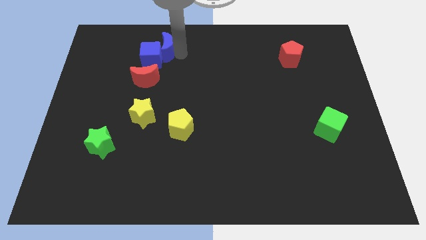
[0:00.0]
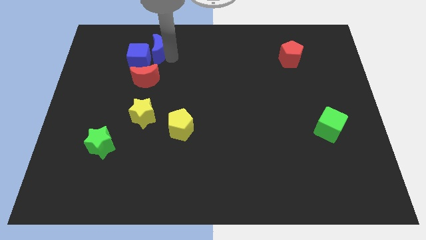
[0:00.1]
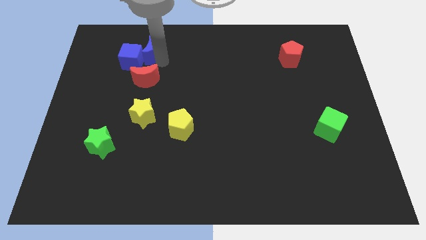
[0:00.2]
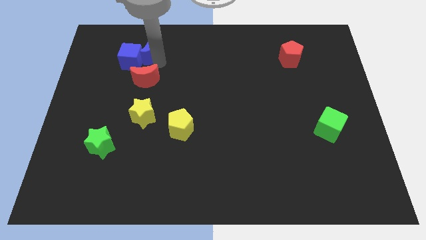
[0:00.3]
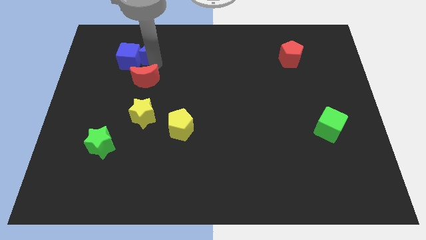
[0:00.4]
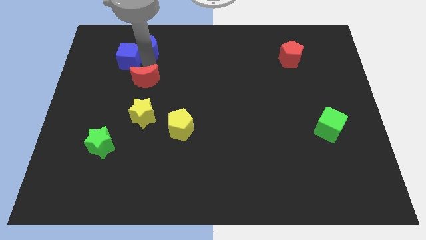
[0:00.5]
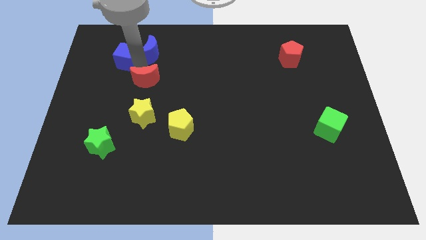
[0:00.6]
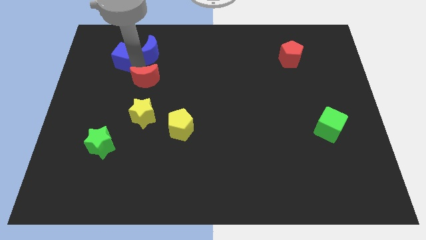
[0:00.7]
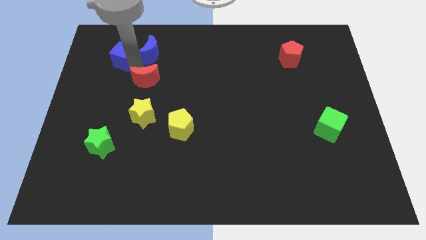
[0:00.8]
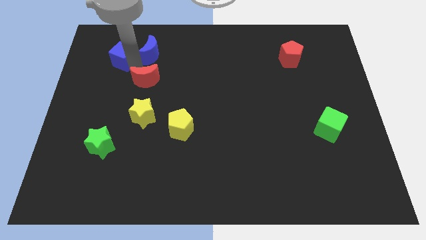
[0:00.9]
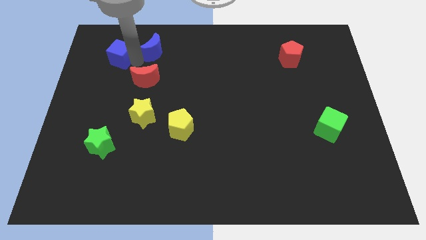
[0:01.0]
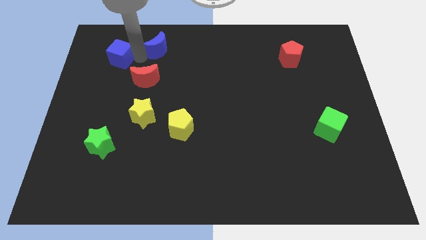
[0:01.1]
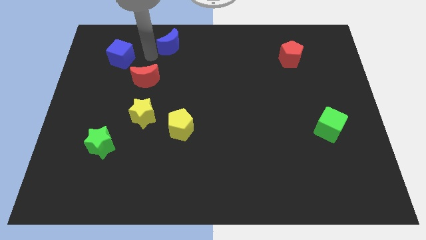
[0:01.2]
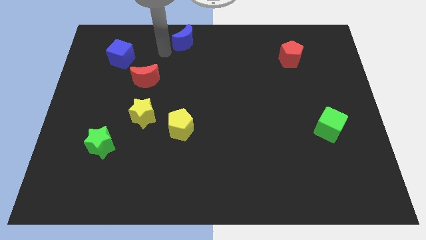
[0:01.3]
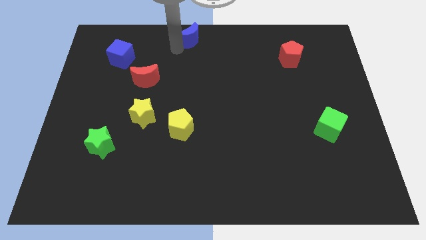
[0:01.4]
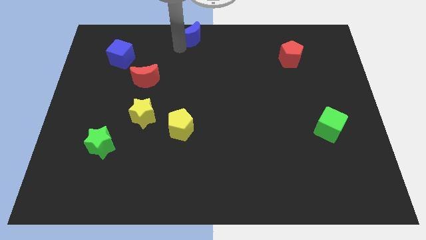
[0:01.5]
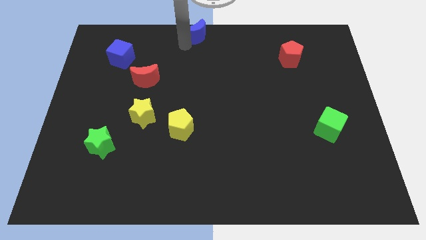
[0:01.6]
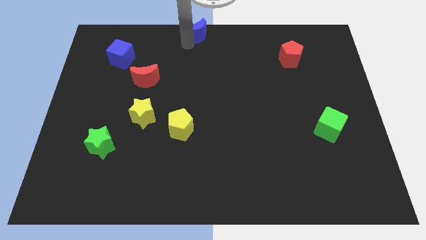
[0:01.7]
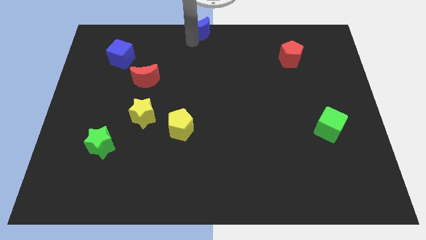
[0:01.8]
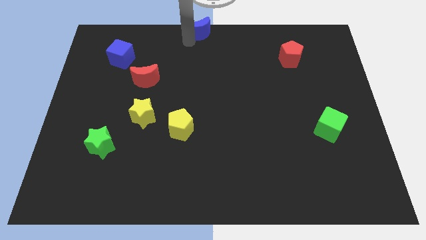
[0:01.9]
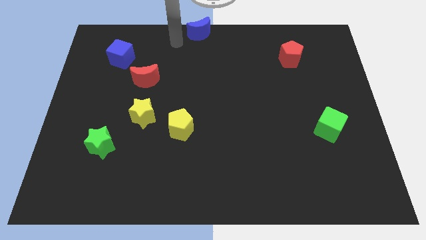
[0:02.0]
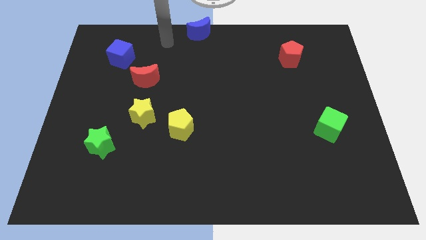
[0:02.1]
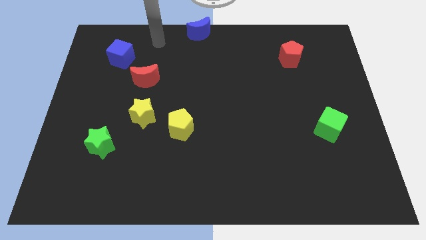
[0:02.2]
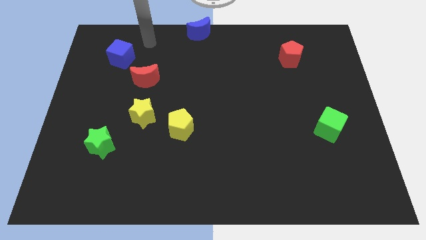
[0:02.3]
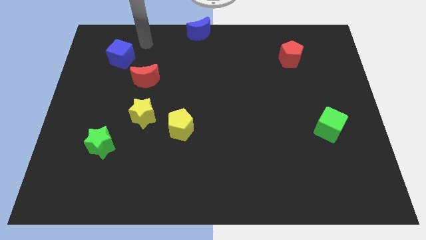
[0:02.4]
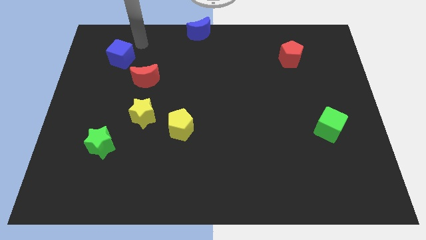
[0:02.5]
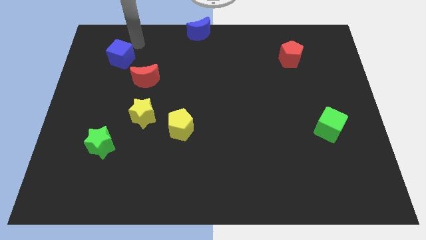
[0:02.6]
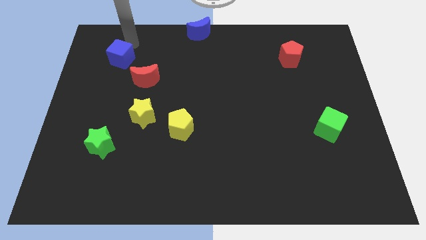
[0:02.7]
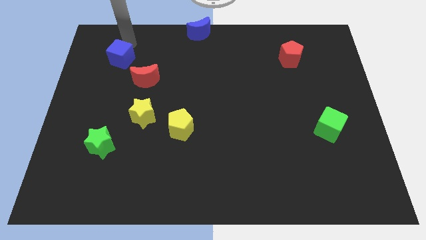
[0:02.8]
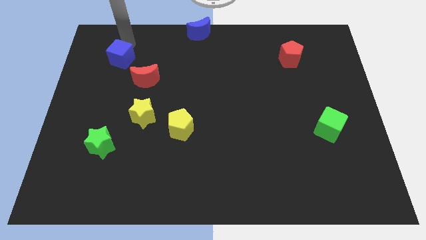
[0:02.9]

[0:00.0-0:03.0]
push the blue crescent to the top center of the board

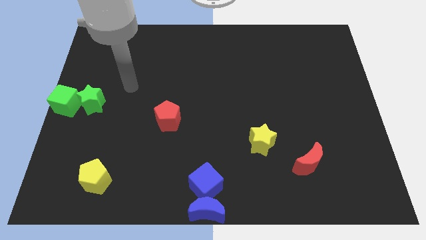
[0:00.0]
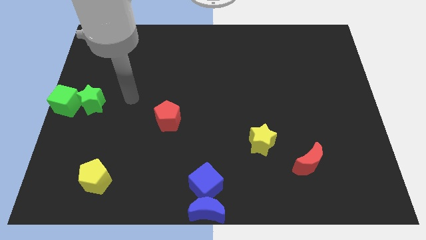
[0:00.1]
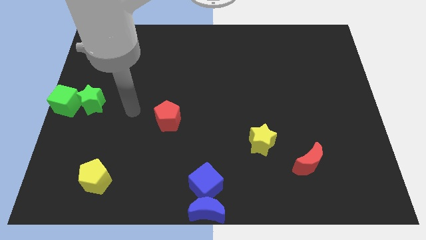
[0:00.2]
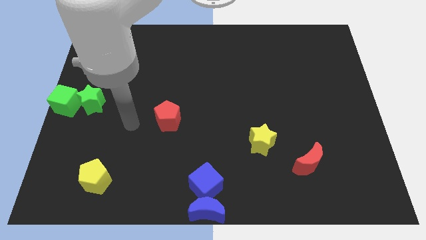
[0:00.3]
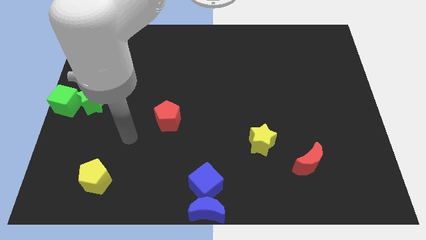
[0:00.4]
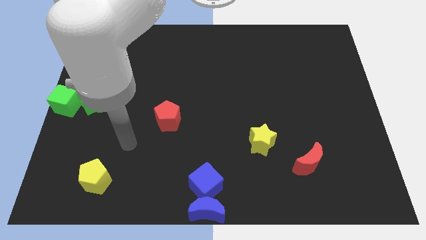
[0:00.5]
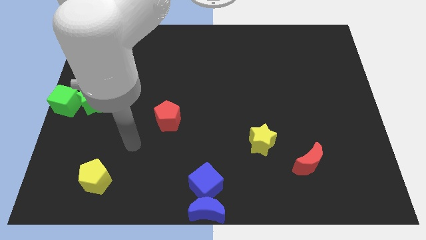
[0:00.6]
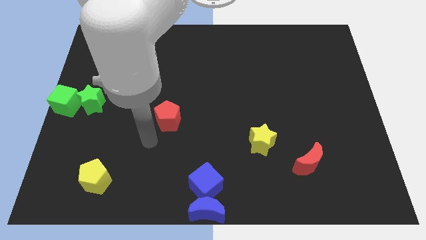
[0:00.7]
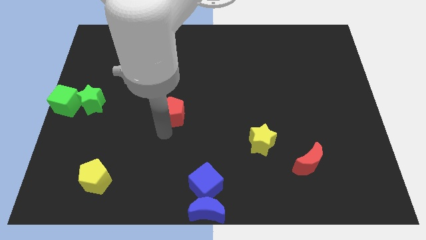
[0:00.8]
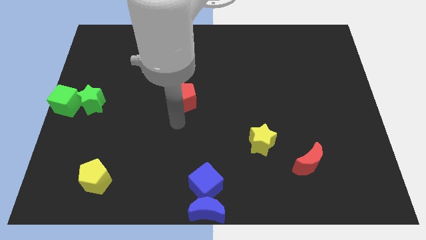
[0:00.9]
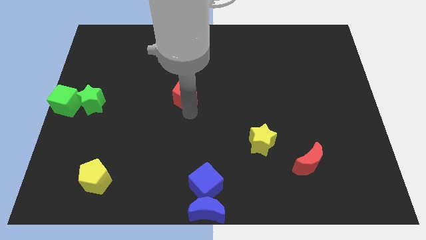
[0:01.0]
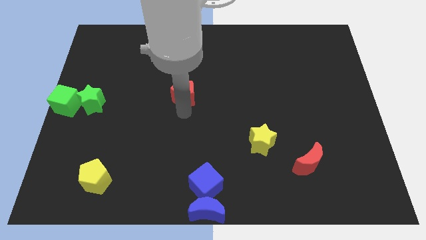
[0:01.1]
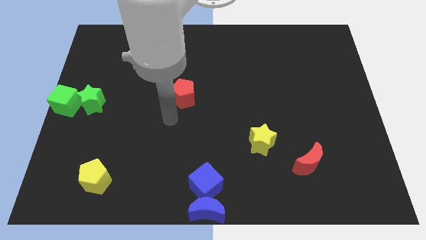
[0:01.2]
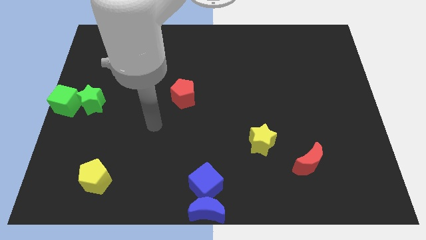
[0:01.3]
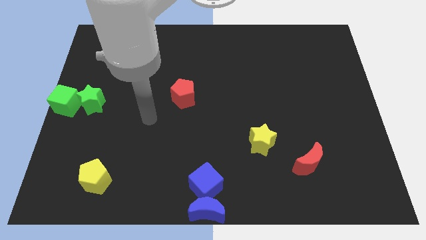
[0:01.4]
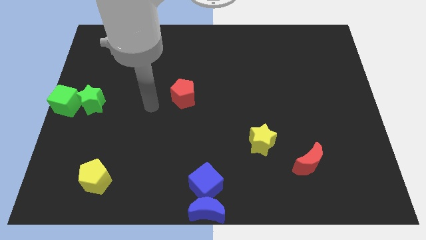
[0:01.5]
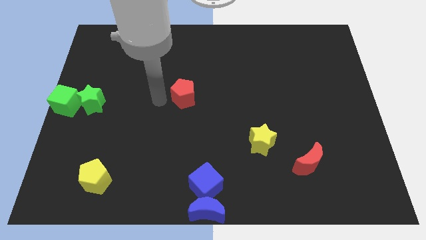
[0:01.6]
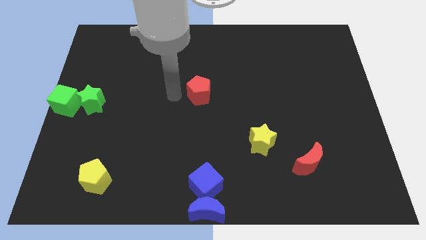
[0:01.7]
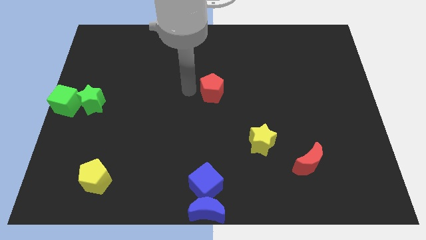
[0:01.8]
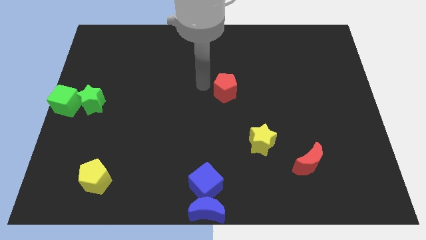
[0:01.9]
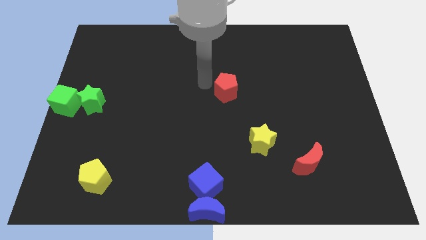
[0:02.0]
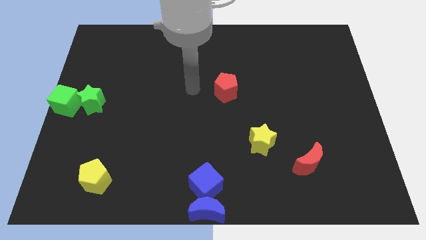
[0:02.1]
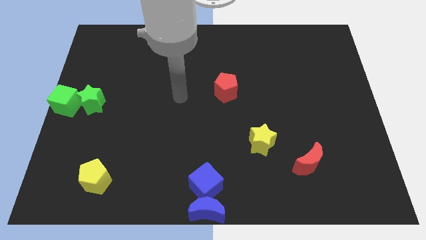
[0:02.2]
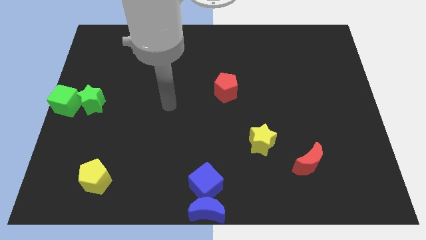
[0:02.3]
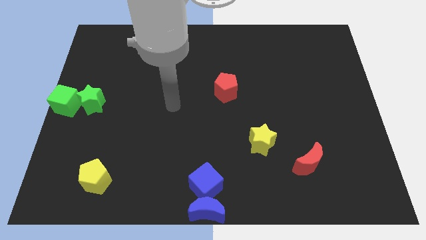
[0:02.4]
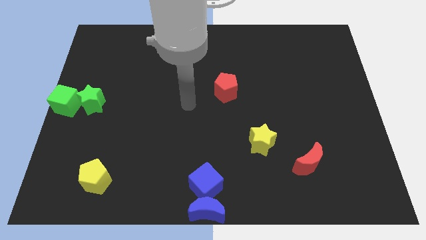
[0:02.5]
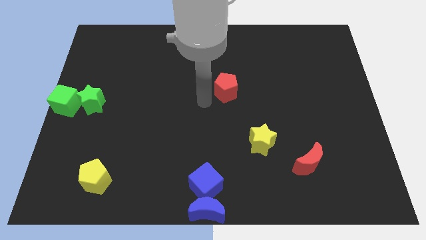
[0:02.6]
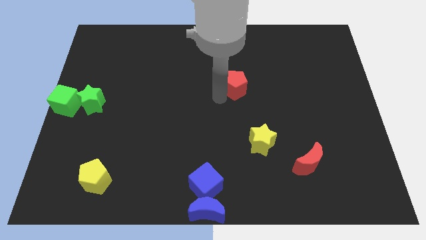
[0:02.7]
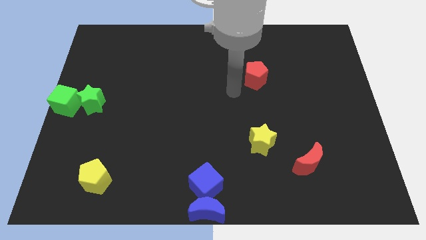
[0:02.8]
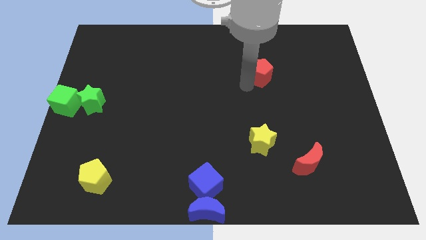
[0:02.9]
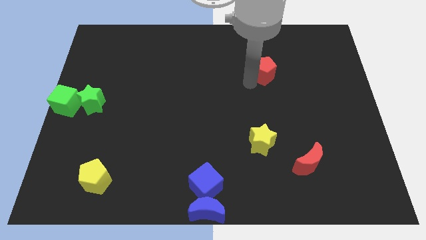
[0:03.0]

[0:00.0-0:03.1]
move the red pentagon to the top of the yellow star

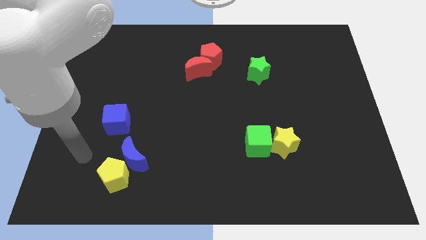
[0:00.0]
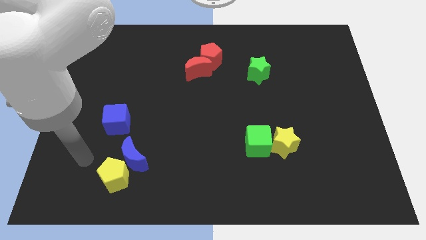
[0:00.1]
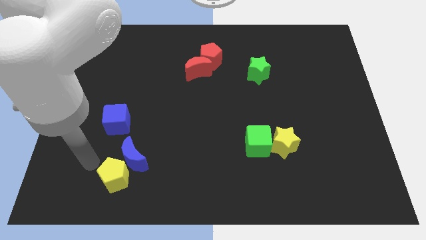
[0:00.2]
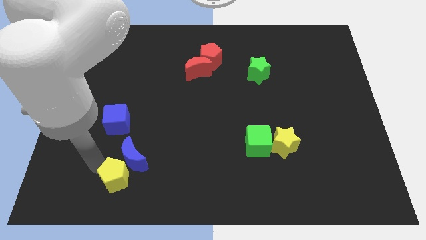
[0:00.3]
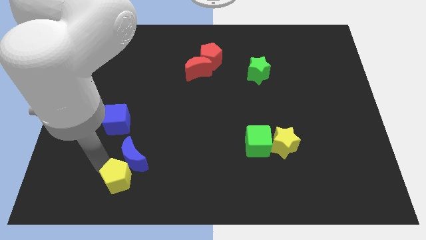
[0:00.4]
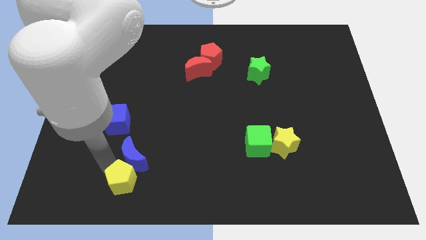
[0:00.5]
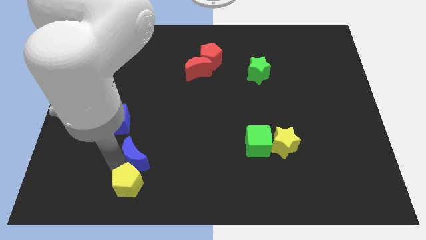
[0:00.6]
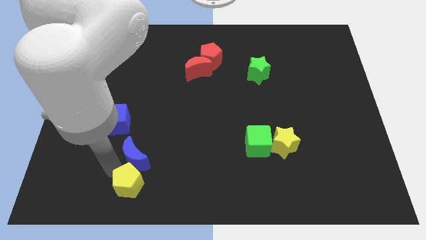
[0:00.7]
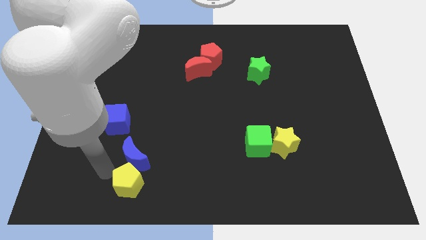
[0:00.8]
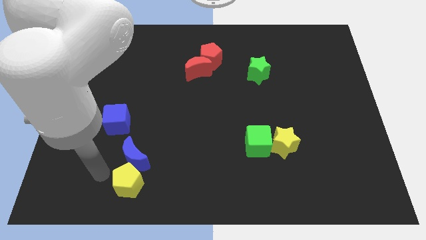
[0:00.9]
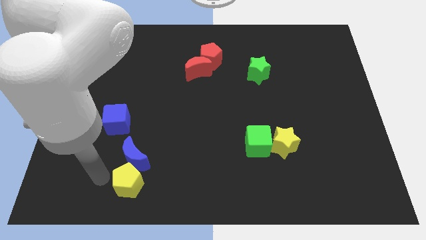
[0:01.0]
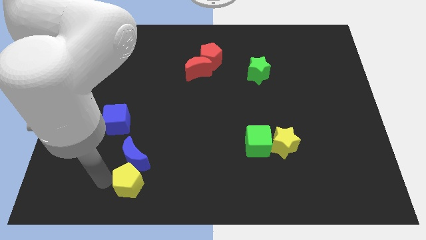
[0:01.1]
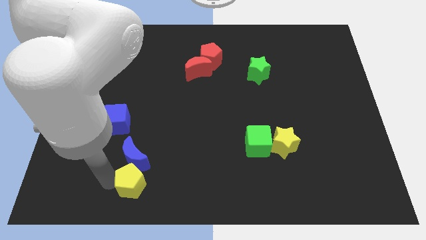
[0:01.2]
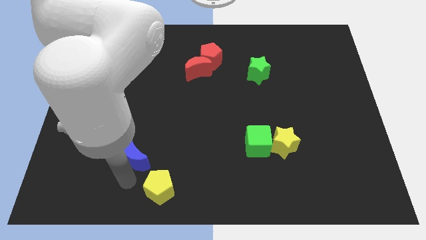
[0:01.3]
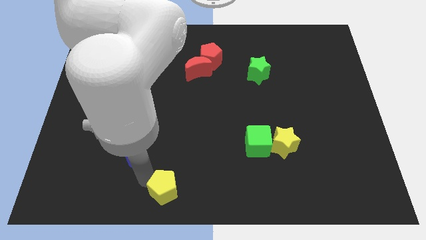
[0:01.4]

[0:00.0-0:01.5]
slide the yellow pentagon diagonally bottom right to the blue moon

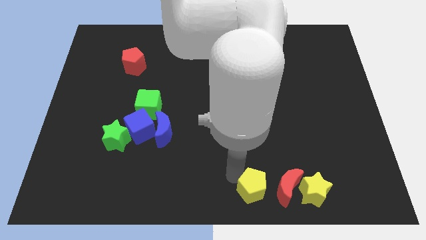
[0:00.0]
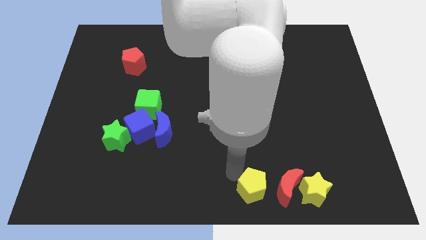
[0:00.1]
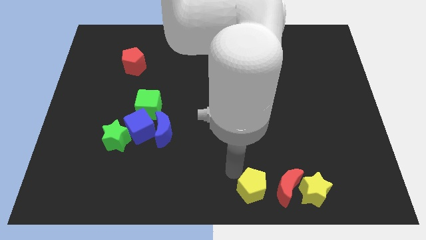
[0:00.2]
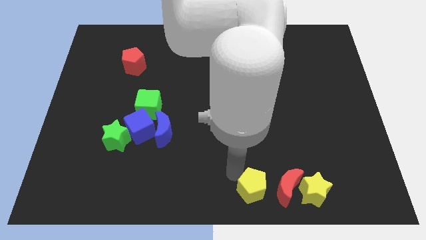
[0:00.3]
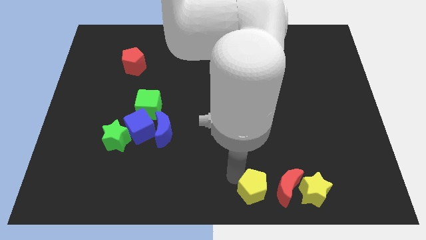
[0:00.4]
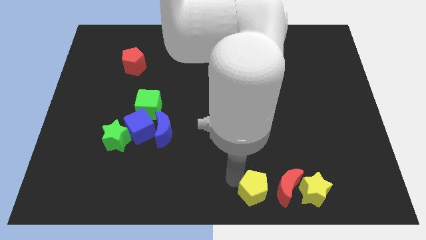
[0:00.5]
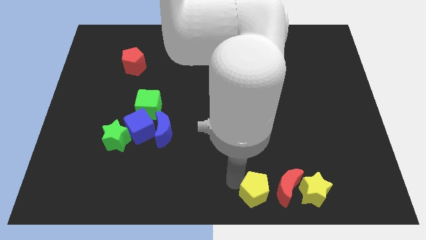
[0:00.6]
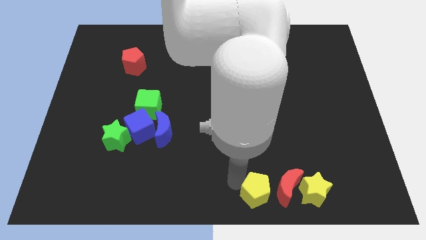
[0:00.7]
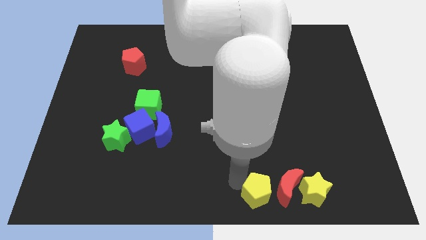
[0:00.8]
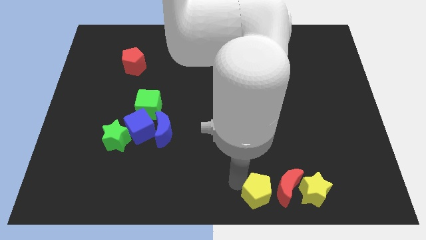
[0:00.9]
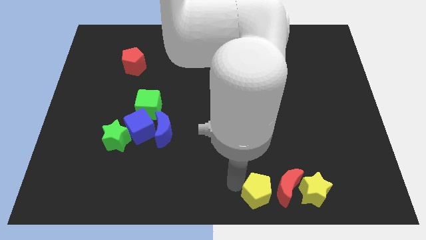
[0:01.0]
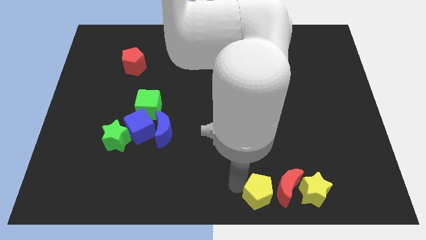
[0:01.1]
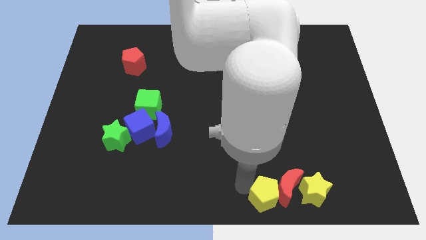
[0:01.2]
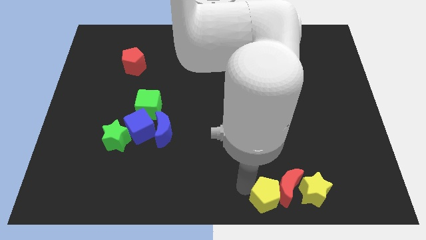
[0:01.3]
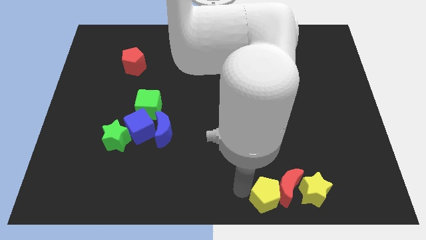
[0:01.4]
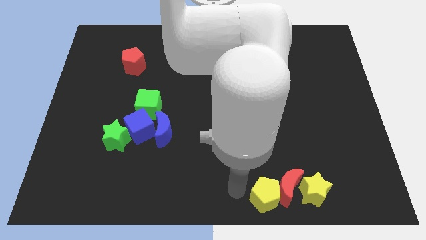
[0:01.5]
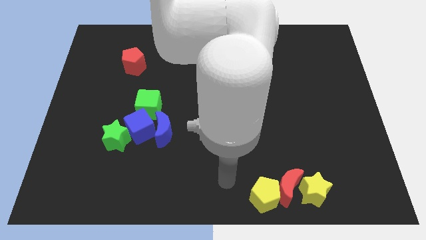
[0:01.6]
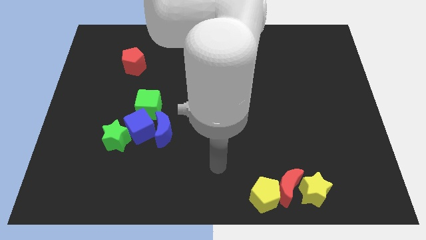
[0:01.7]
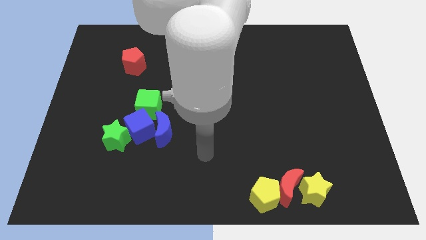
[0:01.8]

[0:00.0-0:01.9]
move the yellow pentagon at the left side of the red crescent
